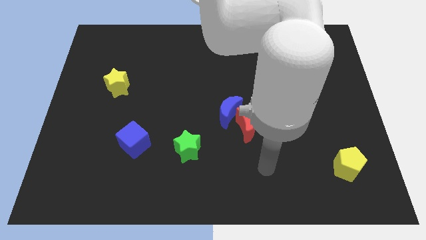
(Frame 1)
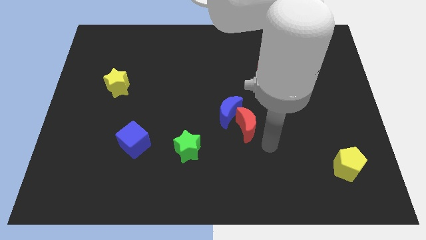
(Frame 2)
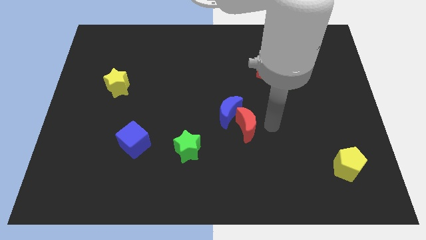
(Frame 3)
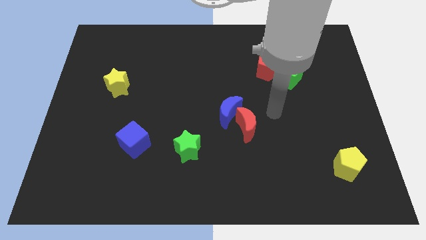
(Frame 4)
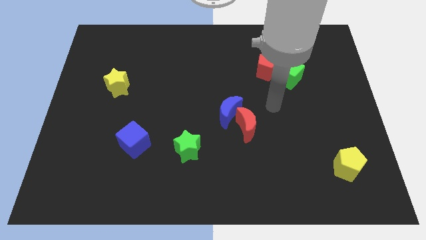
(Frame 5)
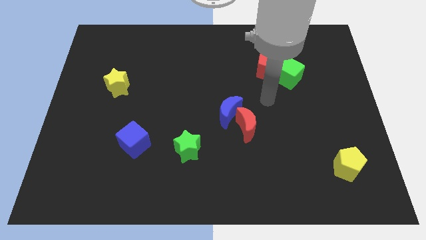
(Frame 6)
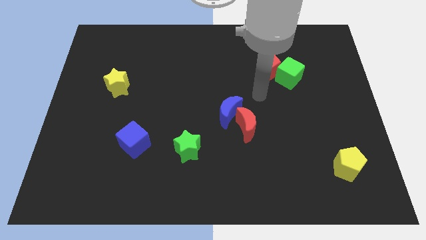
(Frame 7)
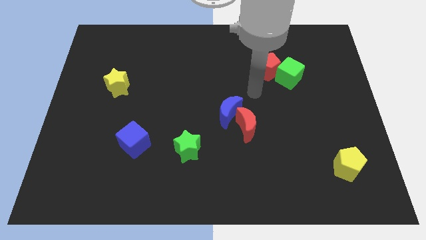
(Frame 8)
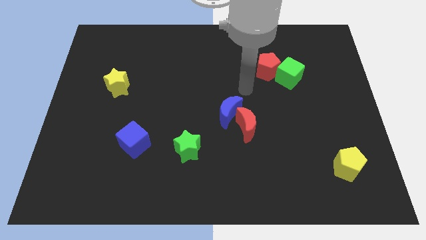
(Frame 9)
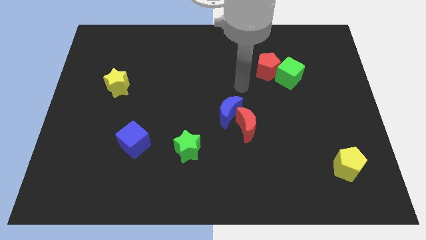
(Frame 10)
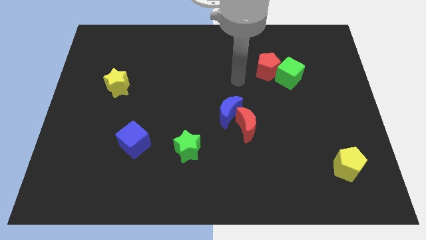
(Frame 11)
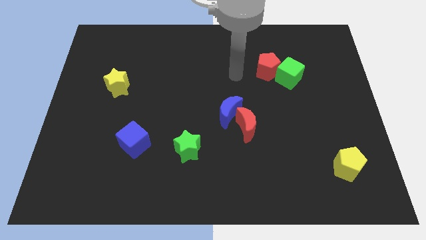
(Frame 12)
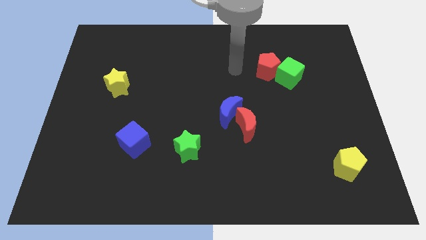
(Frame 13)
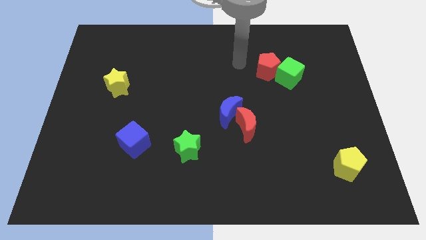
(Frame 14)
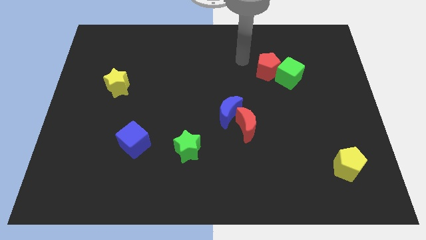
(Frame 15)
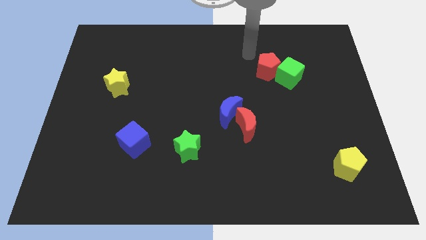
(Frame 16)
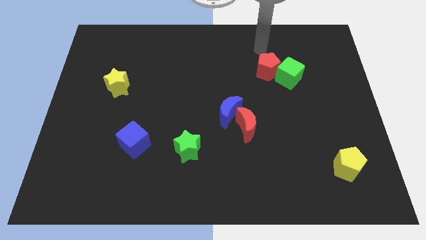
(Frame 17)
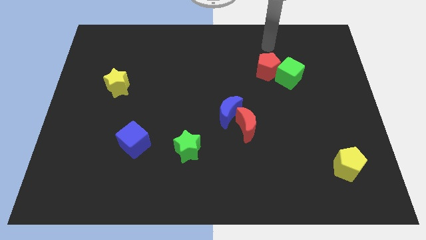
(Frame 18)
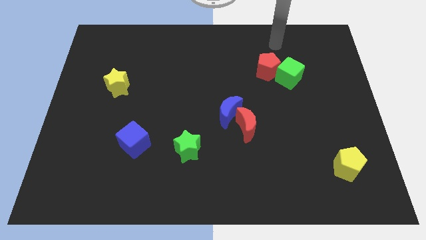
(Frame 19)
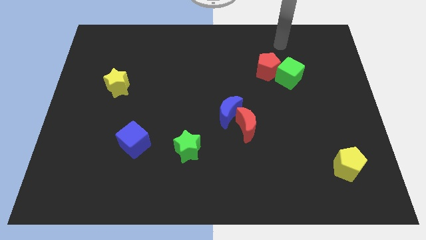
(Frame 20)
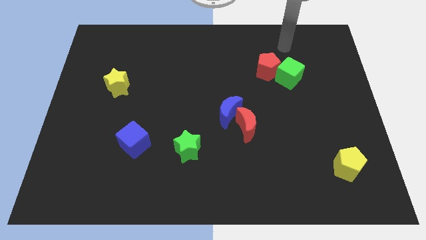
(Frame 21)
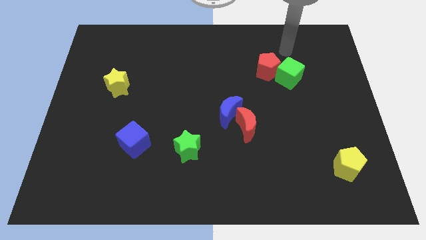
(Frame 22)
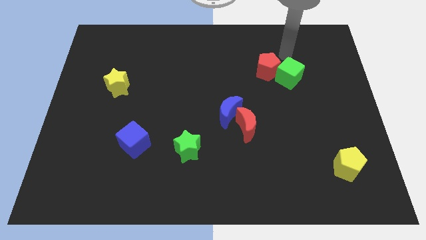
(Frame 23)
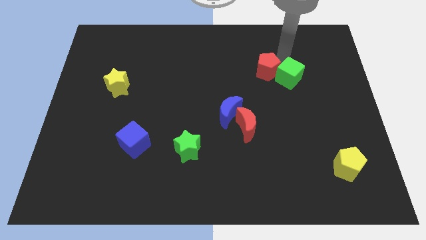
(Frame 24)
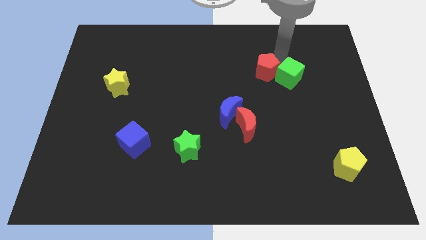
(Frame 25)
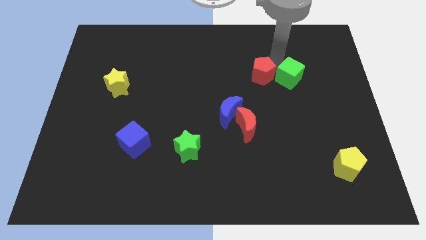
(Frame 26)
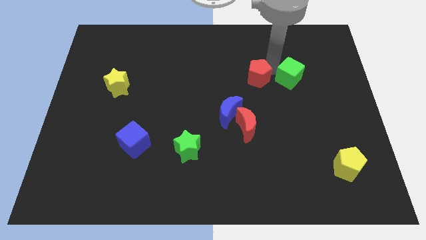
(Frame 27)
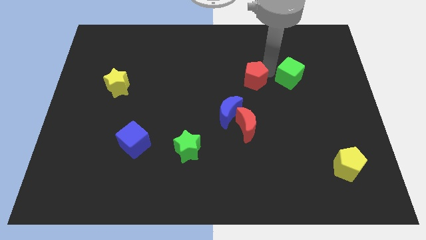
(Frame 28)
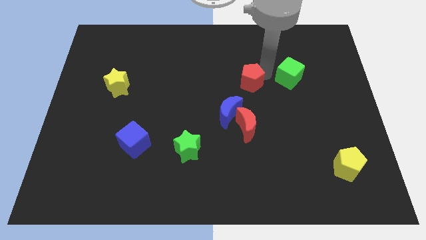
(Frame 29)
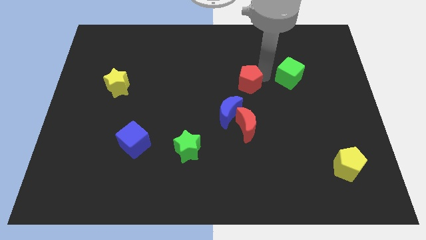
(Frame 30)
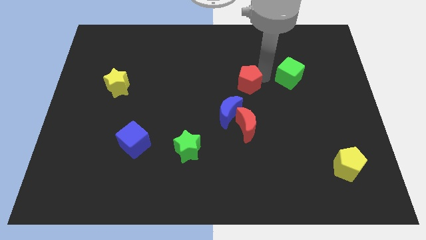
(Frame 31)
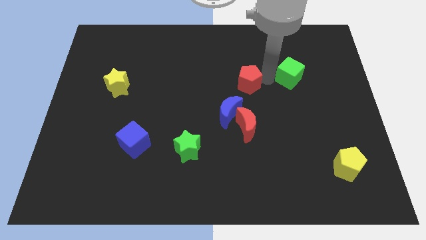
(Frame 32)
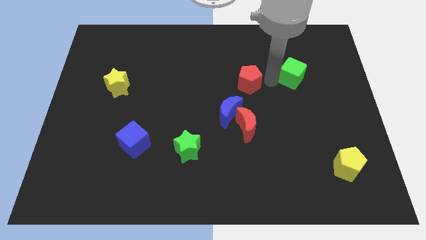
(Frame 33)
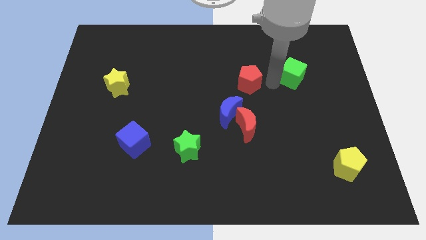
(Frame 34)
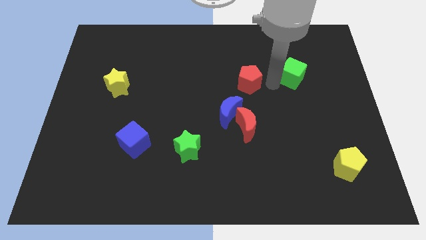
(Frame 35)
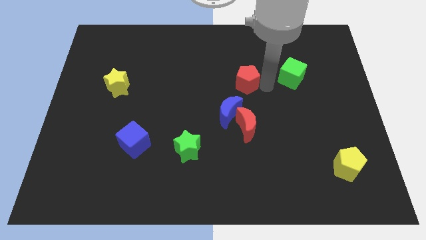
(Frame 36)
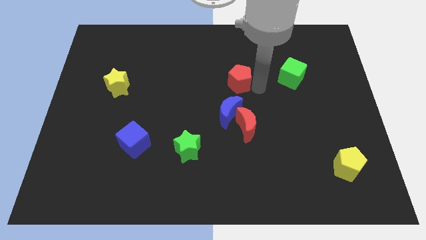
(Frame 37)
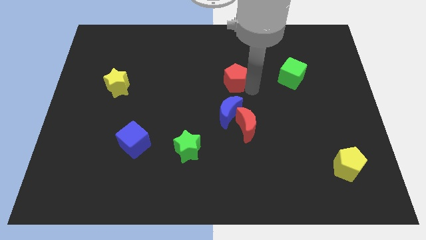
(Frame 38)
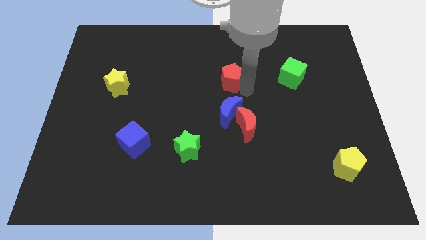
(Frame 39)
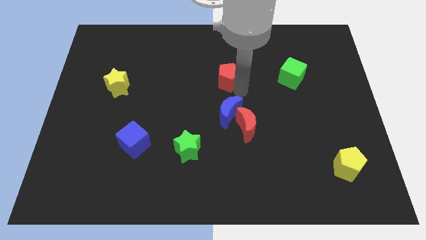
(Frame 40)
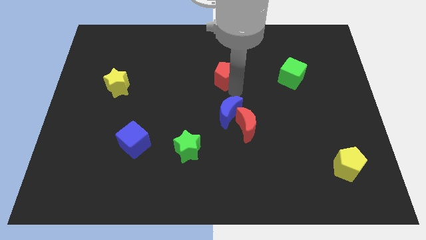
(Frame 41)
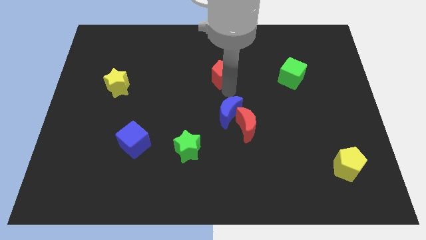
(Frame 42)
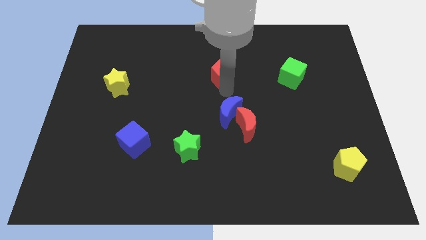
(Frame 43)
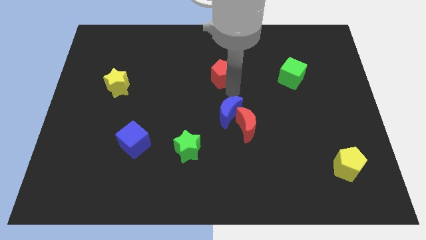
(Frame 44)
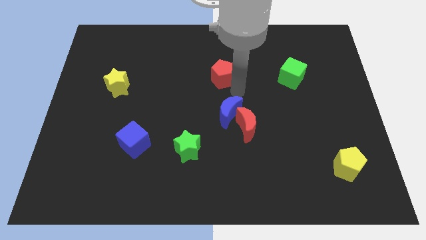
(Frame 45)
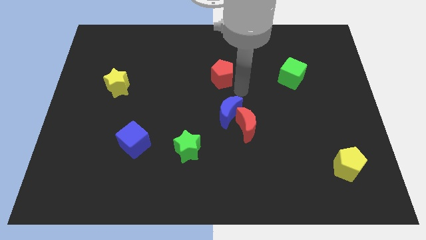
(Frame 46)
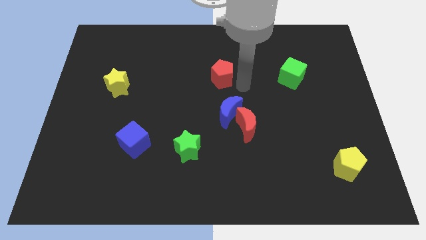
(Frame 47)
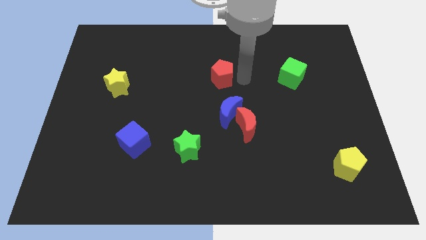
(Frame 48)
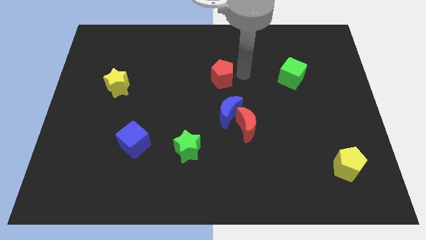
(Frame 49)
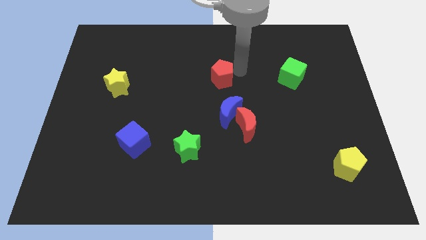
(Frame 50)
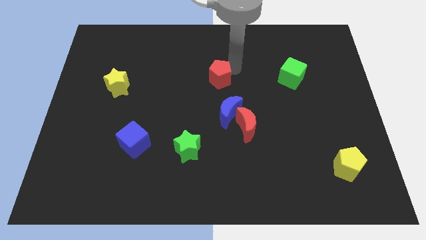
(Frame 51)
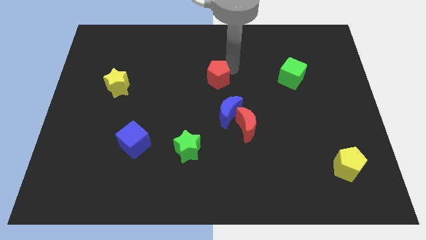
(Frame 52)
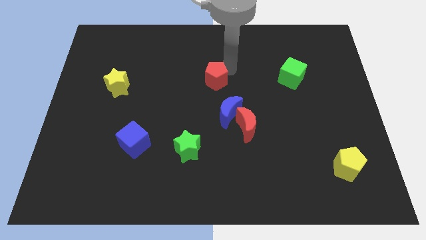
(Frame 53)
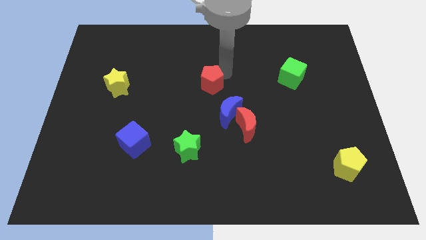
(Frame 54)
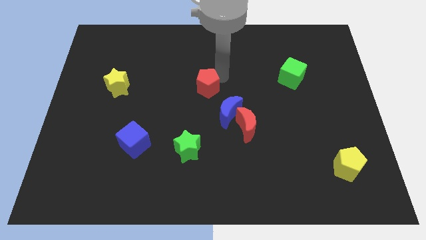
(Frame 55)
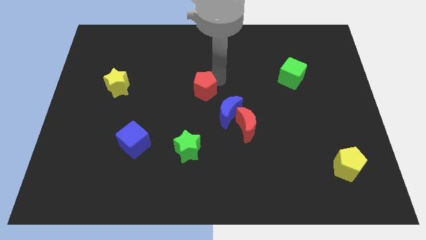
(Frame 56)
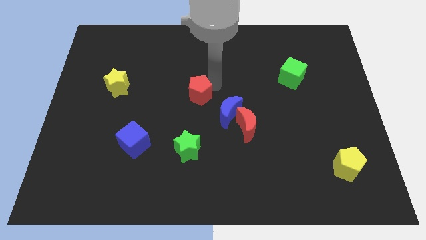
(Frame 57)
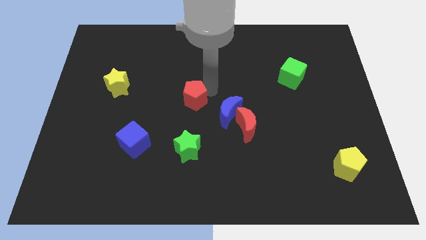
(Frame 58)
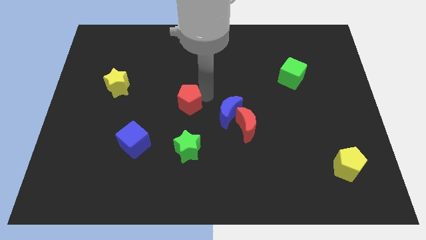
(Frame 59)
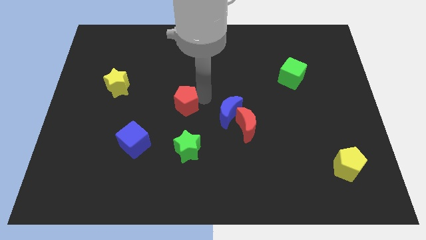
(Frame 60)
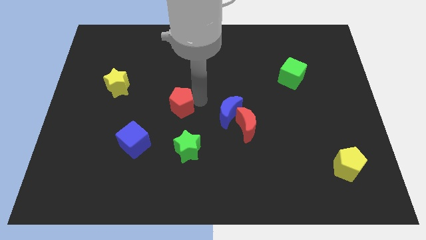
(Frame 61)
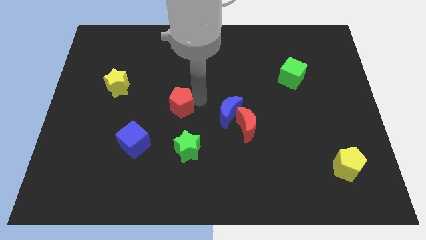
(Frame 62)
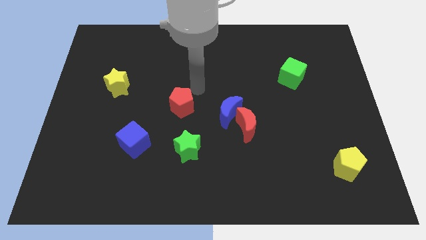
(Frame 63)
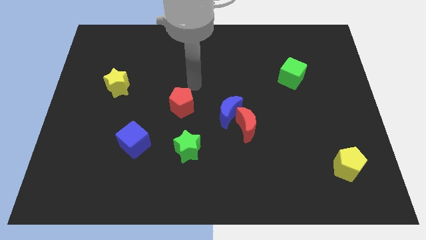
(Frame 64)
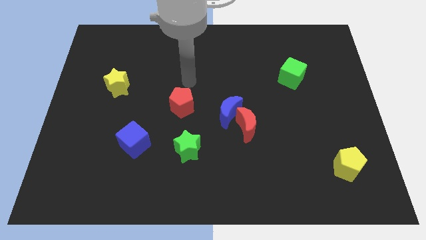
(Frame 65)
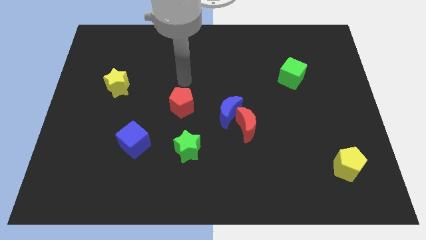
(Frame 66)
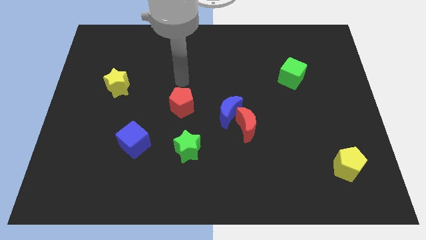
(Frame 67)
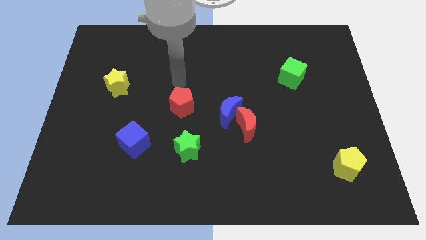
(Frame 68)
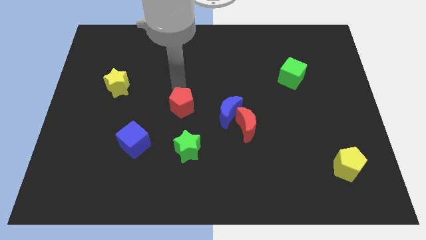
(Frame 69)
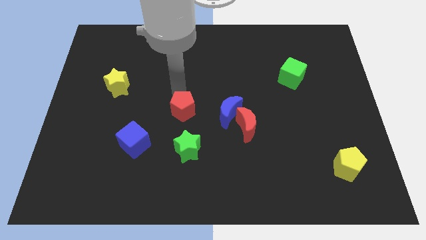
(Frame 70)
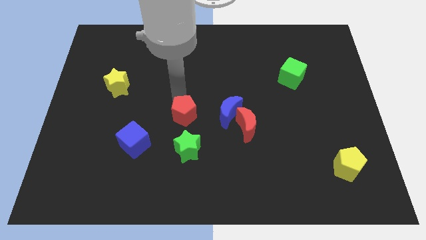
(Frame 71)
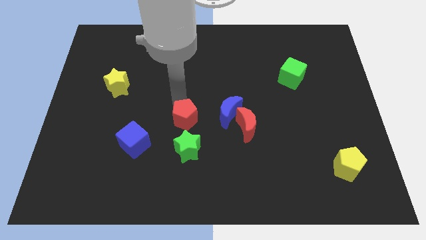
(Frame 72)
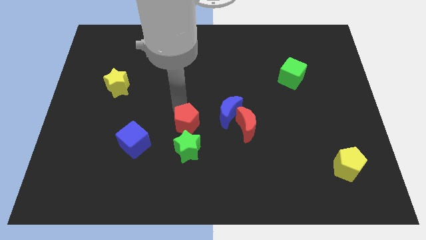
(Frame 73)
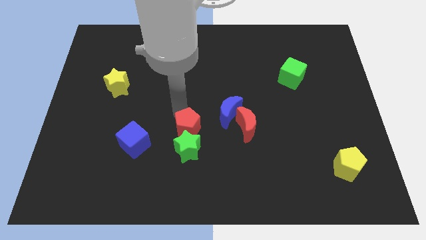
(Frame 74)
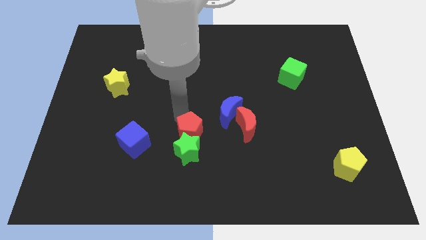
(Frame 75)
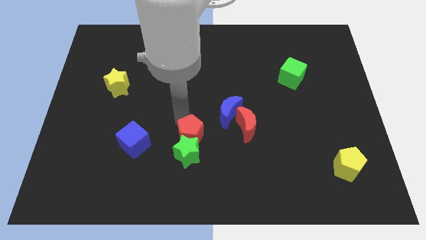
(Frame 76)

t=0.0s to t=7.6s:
push the red pentagon close to the green star

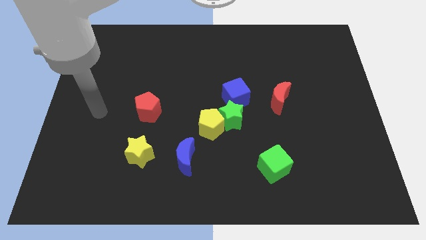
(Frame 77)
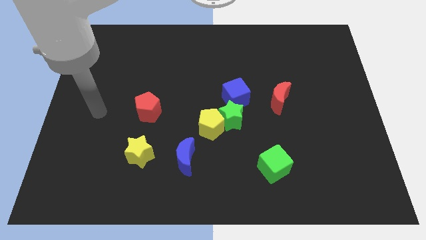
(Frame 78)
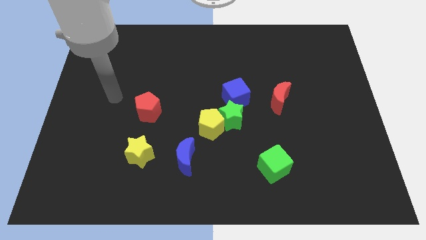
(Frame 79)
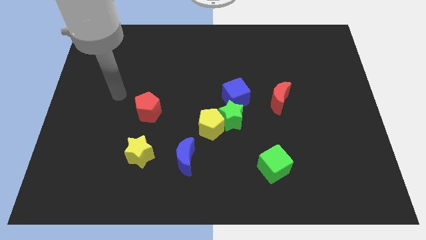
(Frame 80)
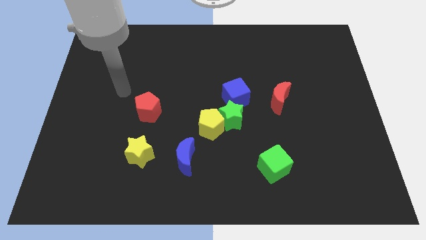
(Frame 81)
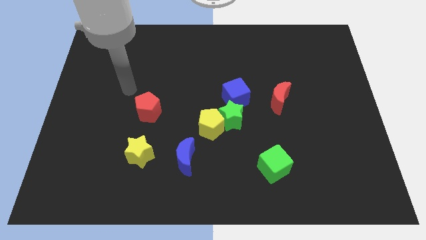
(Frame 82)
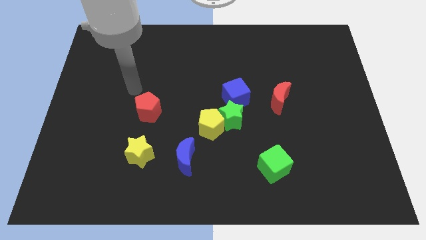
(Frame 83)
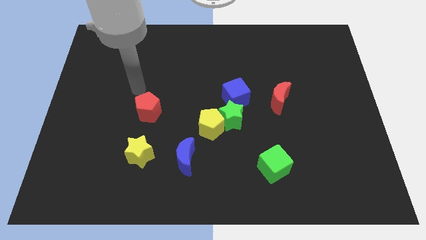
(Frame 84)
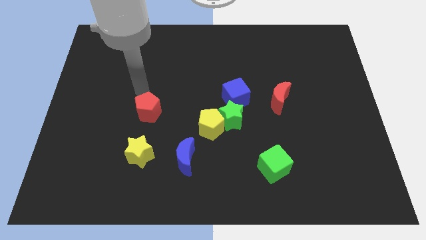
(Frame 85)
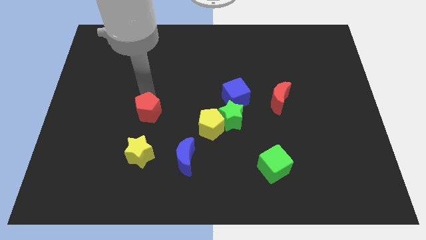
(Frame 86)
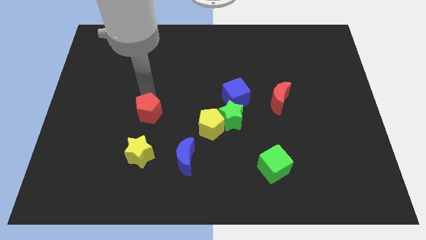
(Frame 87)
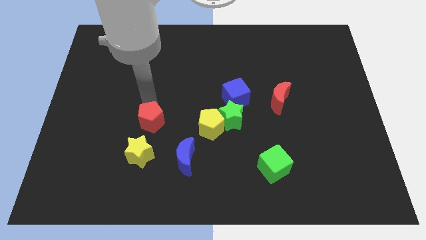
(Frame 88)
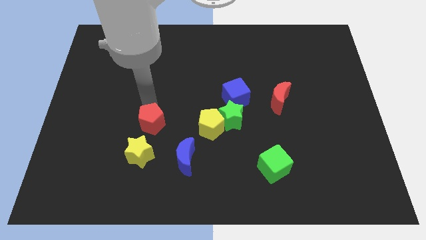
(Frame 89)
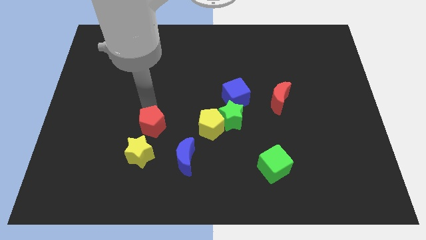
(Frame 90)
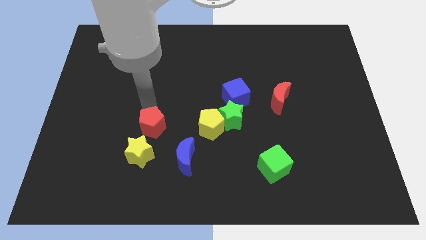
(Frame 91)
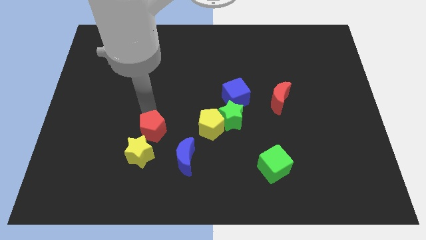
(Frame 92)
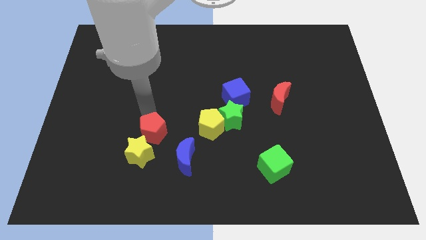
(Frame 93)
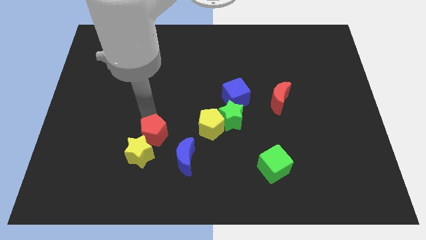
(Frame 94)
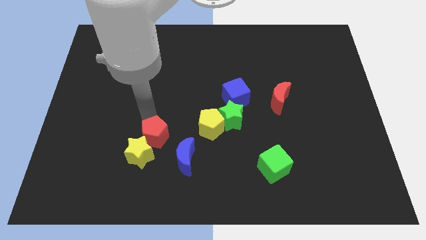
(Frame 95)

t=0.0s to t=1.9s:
slide the red pentagon next to the yellow star
